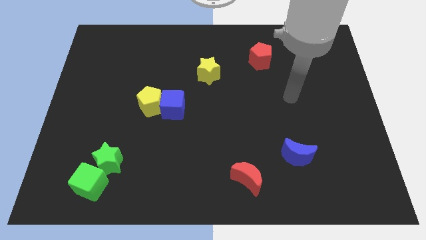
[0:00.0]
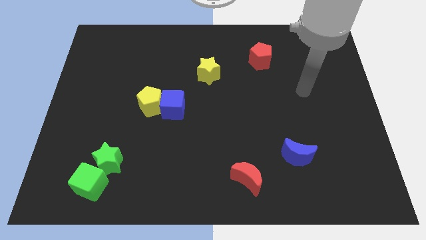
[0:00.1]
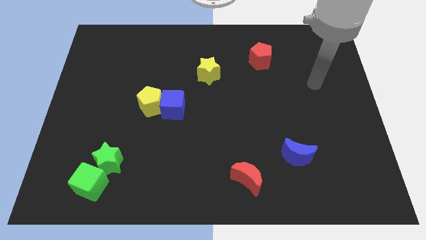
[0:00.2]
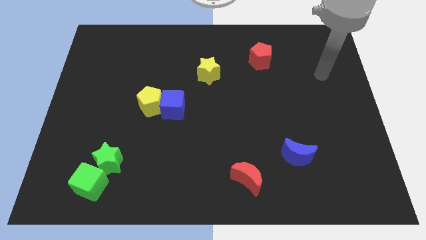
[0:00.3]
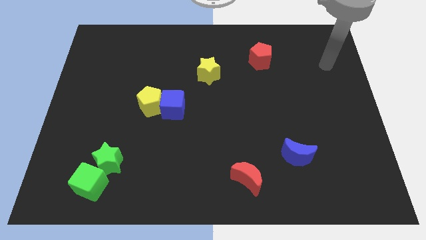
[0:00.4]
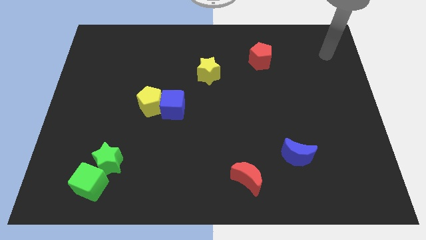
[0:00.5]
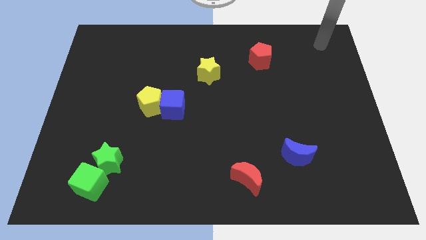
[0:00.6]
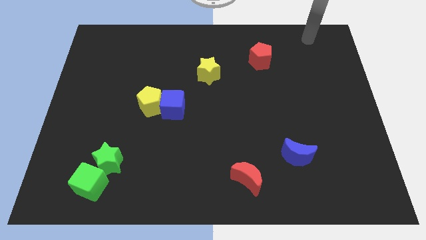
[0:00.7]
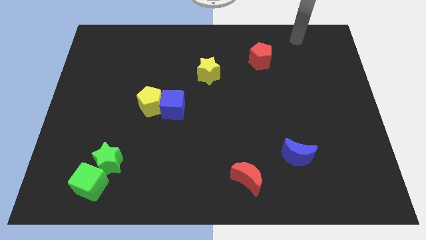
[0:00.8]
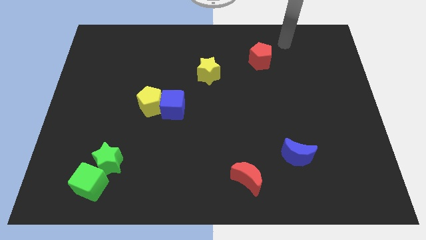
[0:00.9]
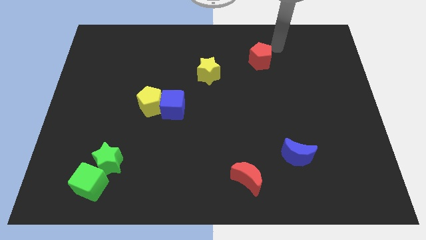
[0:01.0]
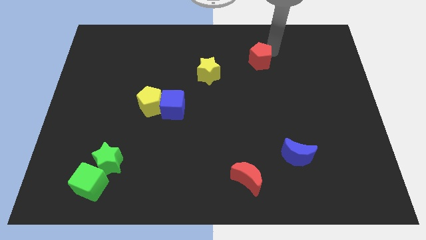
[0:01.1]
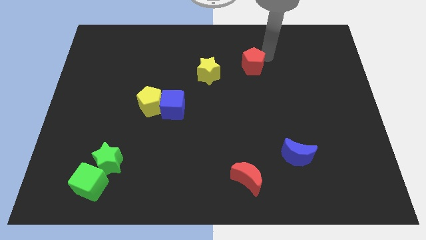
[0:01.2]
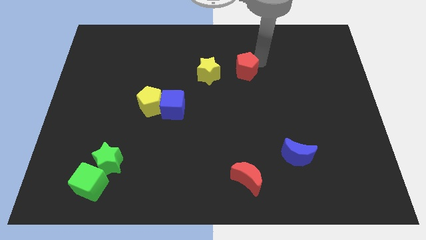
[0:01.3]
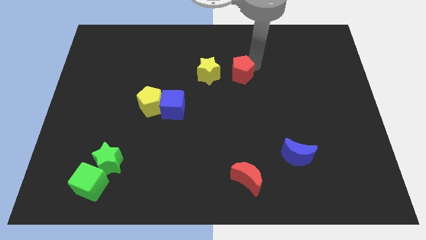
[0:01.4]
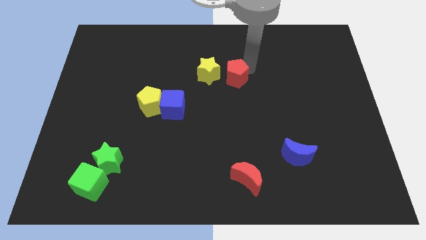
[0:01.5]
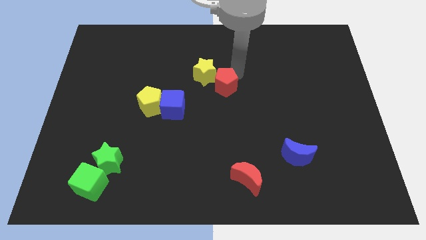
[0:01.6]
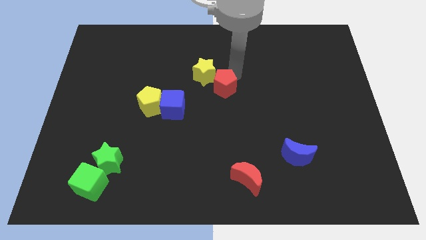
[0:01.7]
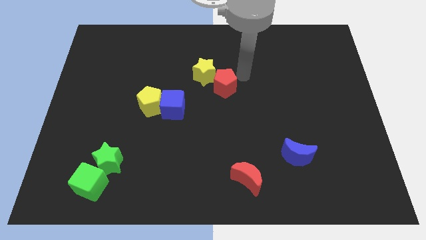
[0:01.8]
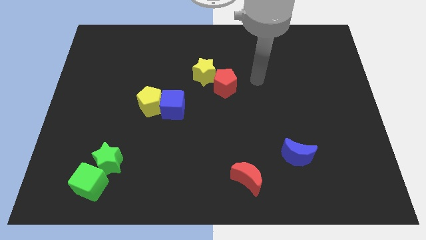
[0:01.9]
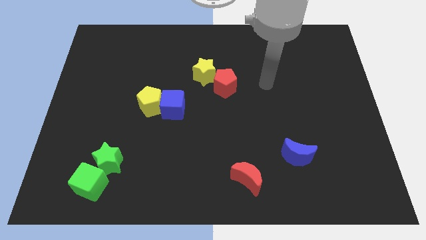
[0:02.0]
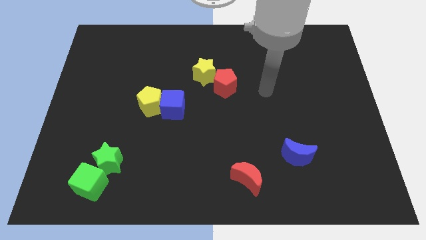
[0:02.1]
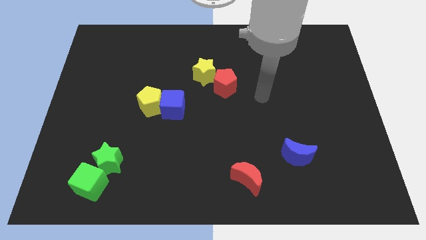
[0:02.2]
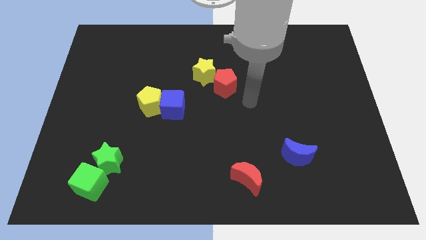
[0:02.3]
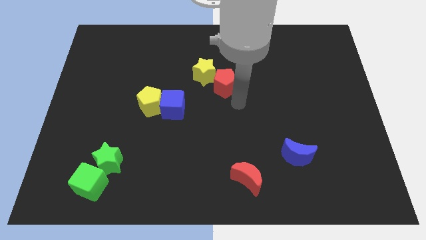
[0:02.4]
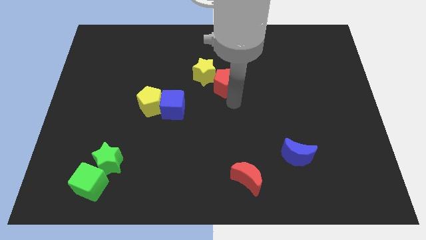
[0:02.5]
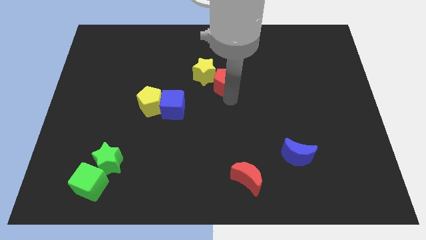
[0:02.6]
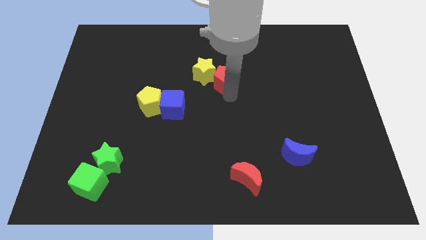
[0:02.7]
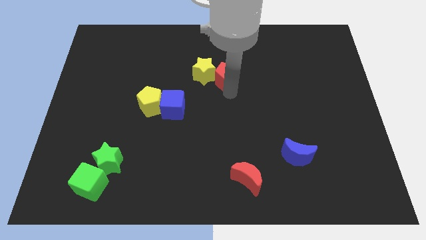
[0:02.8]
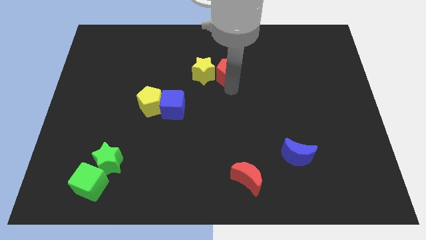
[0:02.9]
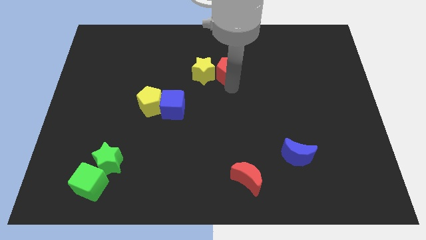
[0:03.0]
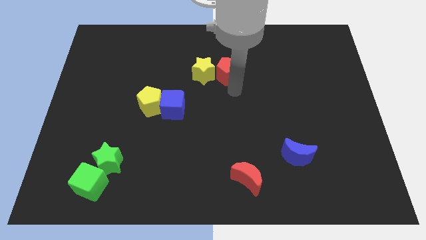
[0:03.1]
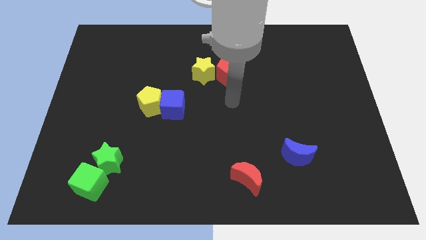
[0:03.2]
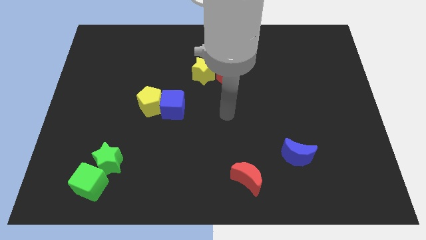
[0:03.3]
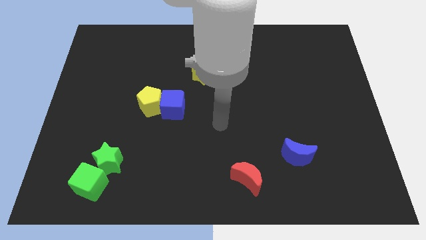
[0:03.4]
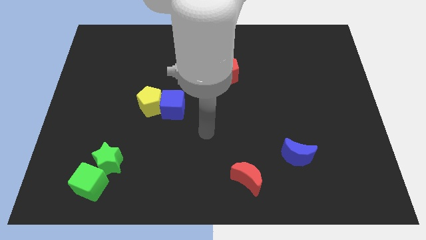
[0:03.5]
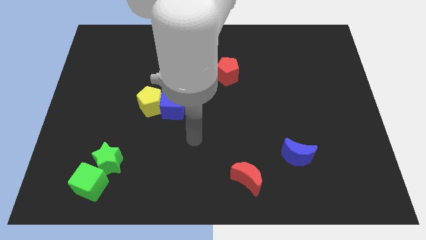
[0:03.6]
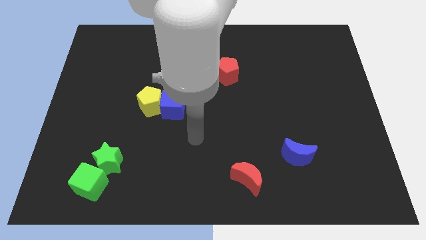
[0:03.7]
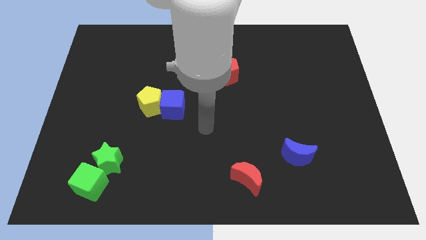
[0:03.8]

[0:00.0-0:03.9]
place the red pentagon beside to the yellow star

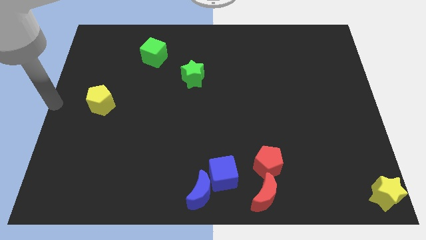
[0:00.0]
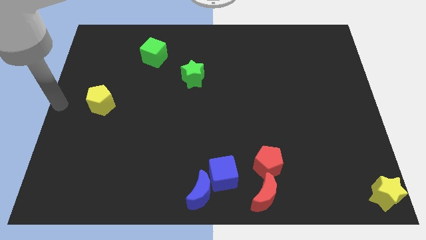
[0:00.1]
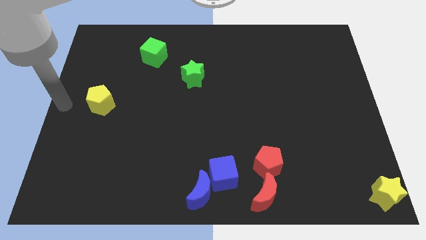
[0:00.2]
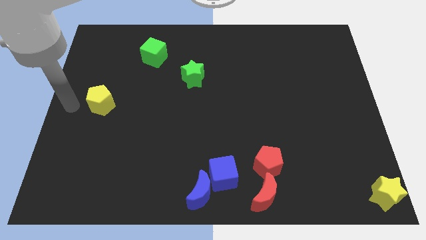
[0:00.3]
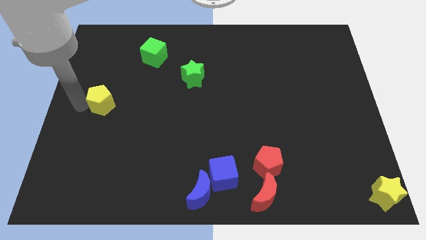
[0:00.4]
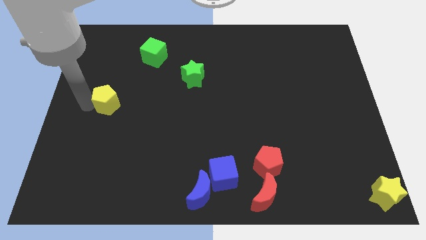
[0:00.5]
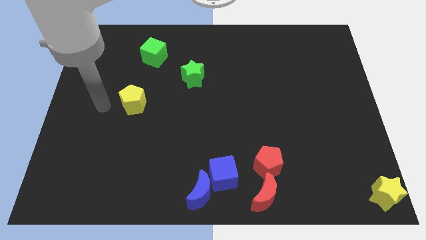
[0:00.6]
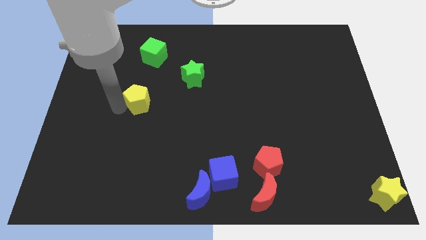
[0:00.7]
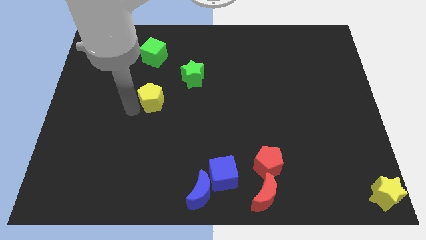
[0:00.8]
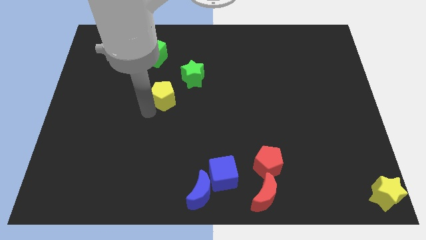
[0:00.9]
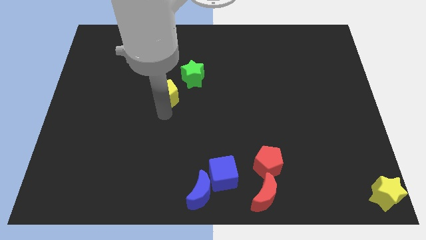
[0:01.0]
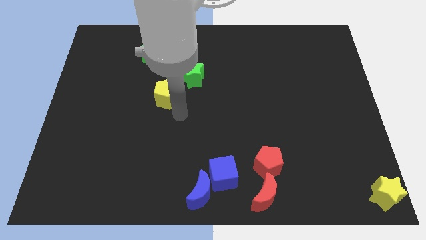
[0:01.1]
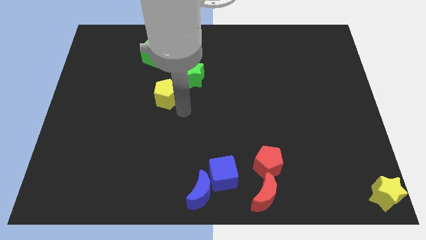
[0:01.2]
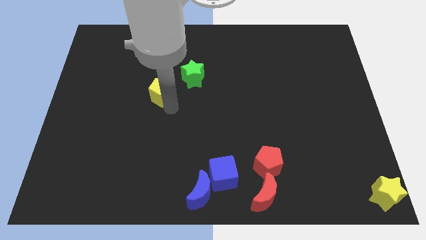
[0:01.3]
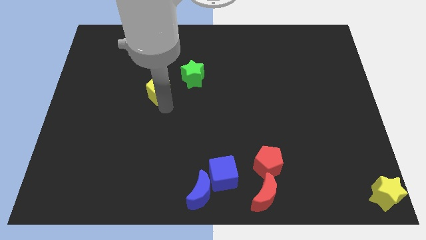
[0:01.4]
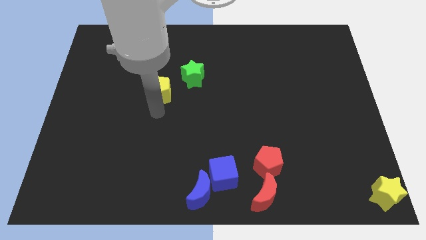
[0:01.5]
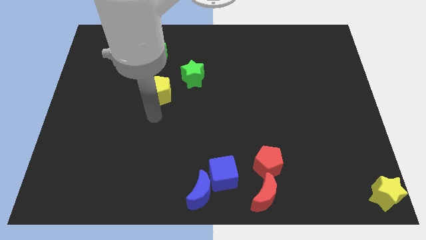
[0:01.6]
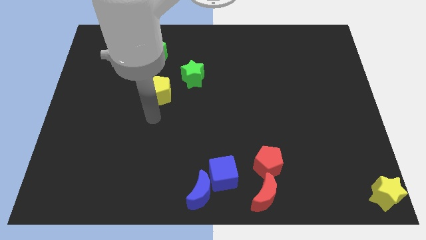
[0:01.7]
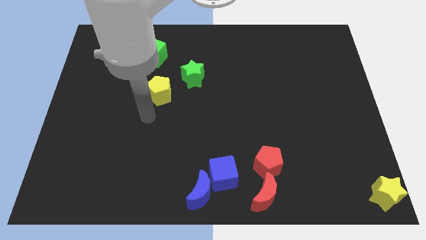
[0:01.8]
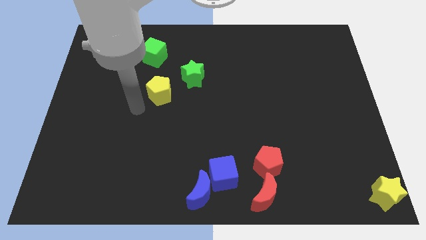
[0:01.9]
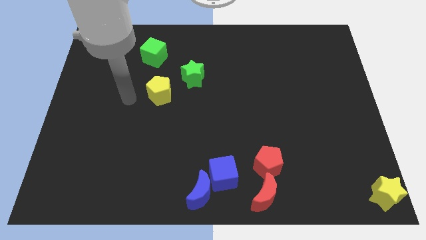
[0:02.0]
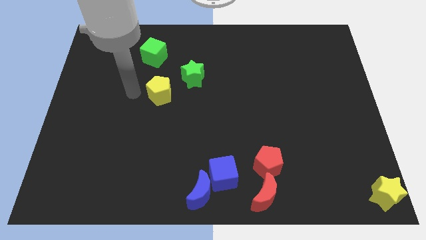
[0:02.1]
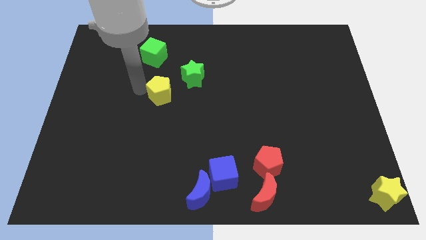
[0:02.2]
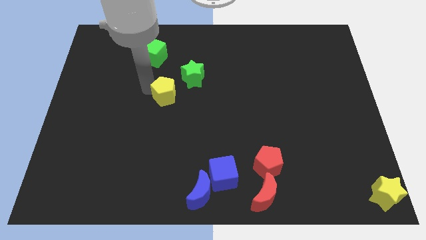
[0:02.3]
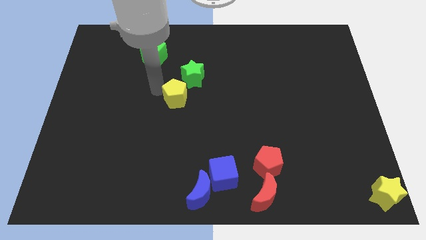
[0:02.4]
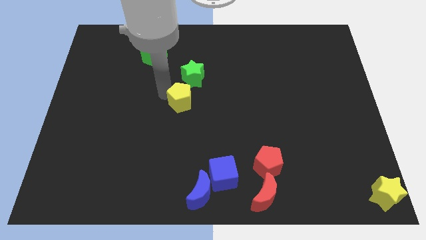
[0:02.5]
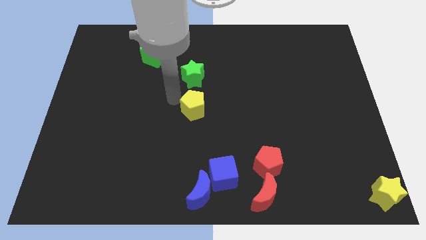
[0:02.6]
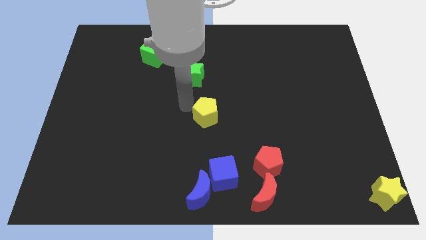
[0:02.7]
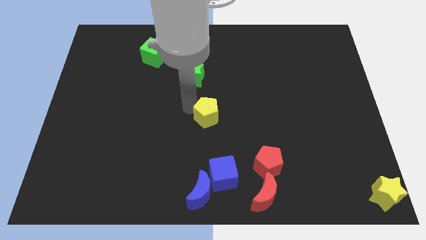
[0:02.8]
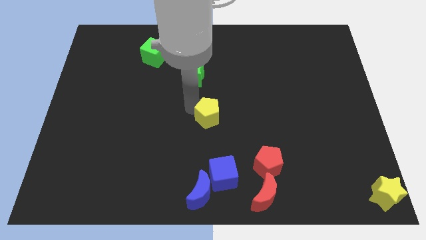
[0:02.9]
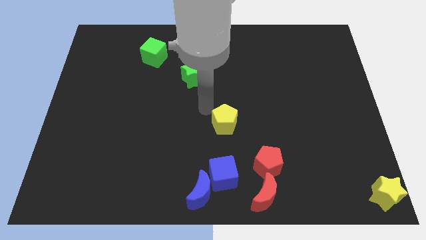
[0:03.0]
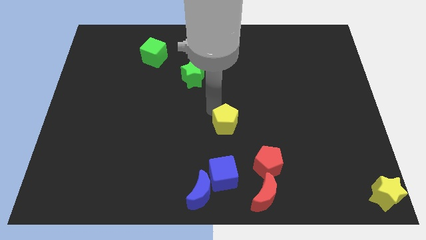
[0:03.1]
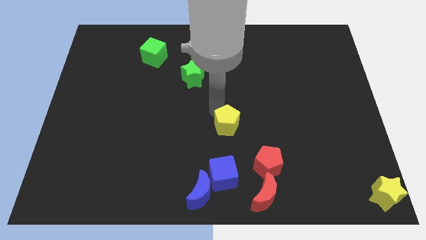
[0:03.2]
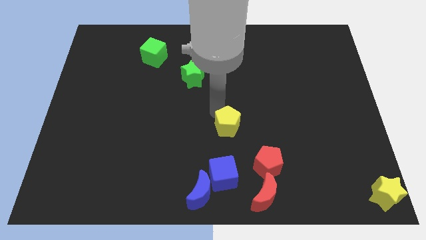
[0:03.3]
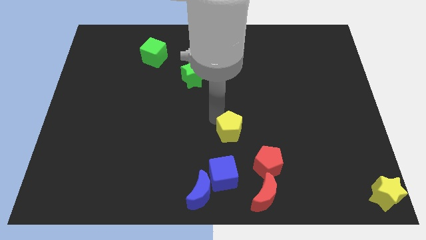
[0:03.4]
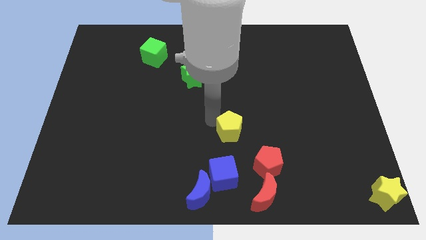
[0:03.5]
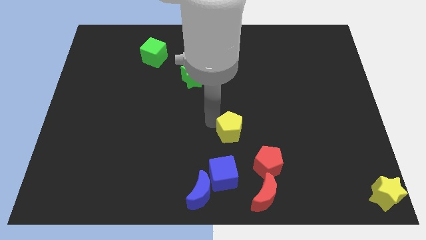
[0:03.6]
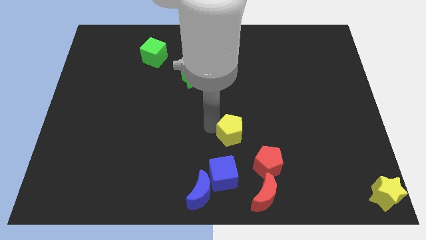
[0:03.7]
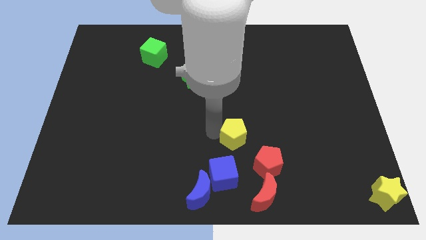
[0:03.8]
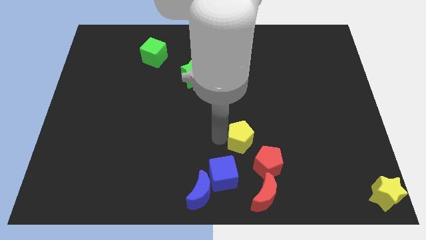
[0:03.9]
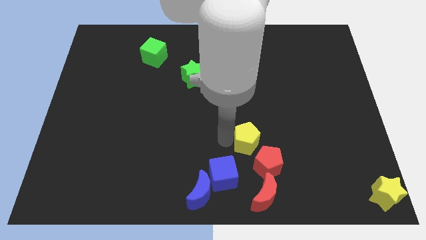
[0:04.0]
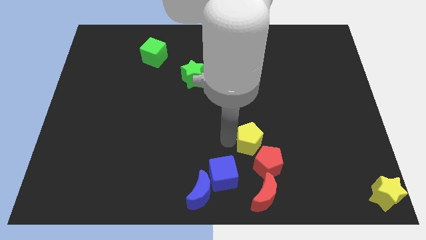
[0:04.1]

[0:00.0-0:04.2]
push the yellow pentagon to the top right of the blue cube

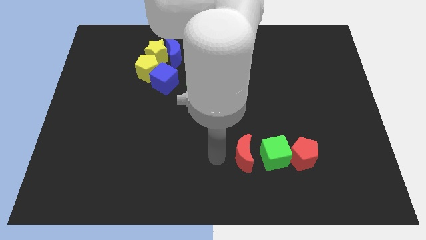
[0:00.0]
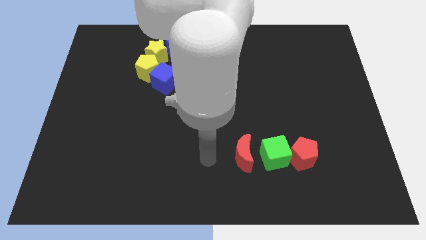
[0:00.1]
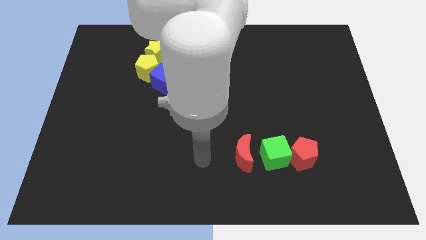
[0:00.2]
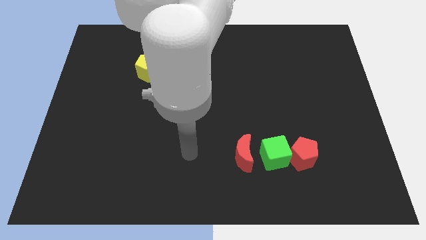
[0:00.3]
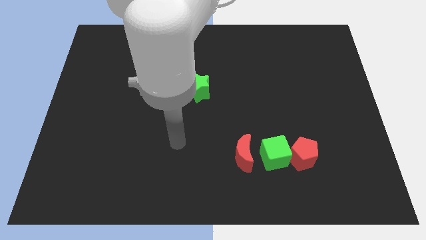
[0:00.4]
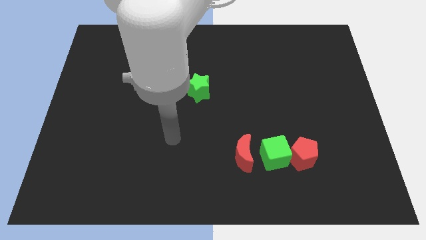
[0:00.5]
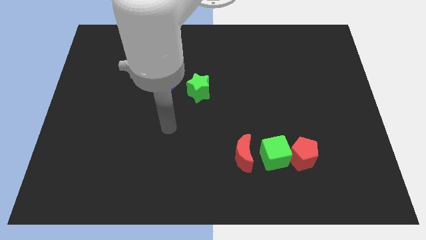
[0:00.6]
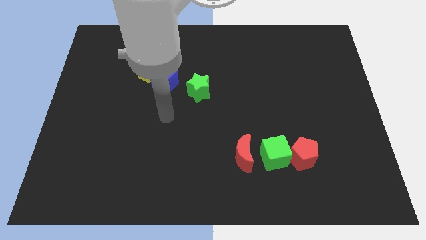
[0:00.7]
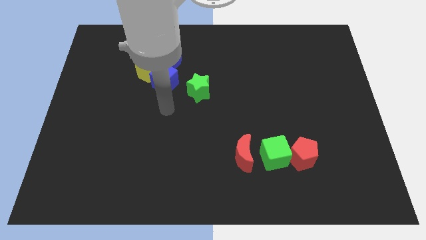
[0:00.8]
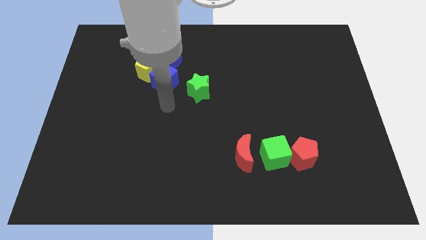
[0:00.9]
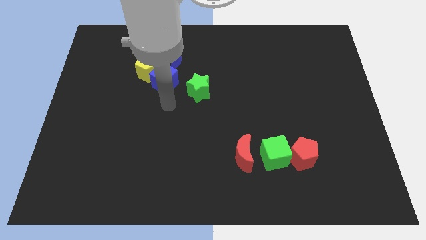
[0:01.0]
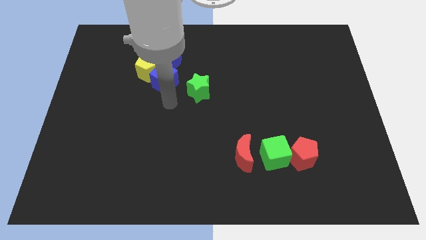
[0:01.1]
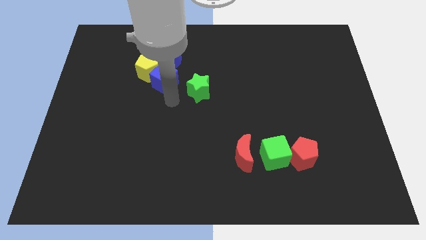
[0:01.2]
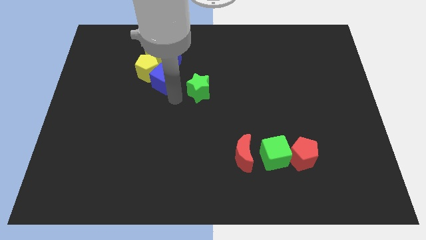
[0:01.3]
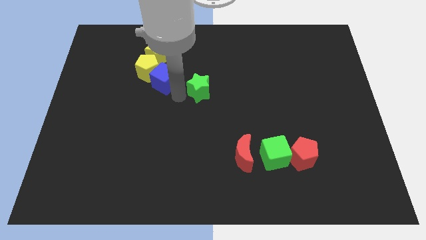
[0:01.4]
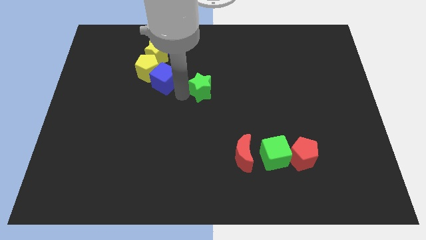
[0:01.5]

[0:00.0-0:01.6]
point your arm at the bottom right side of the blue cube
